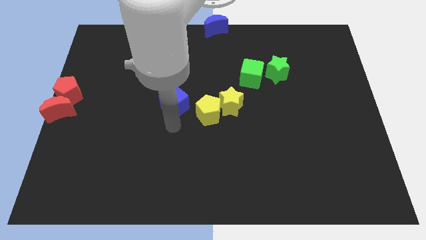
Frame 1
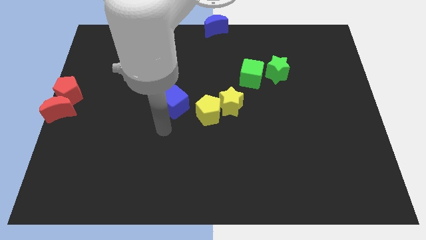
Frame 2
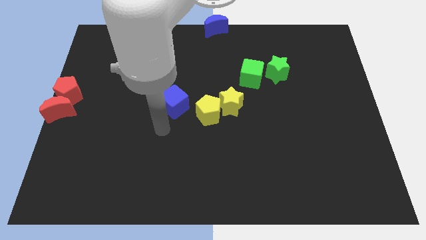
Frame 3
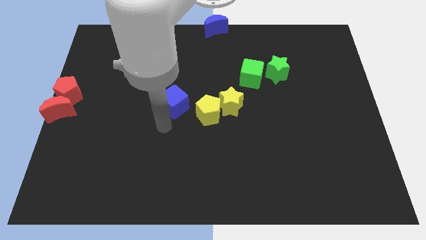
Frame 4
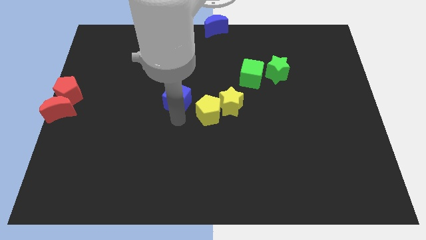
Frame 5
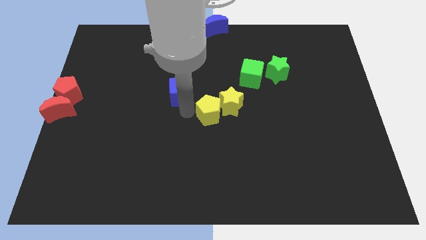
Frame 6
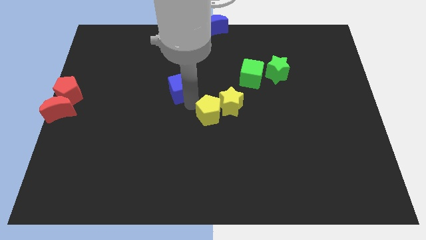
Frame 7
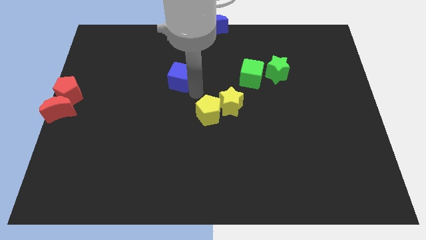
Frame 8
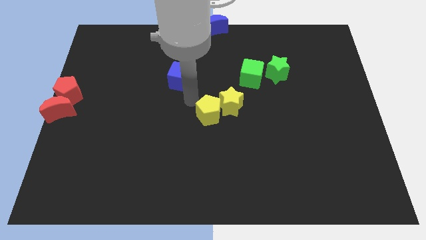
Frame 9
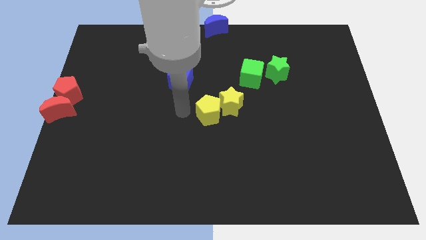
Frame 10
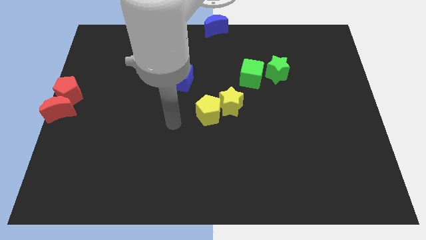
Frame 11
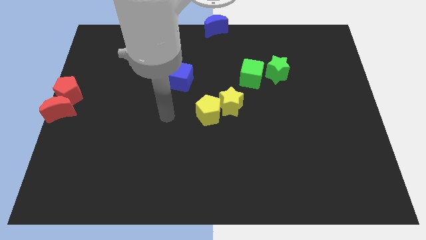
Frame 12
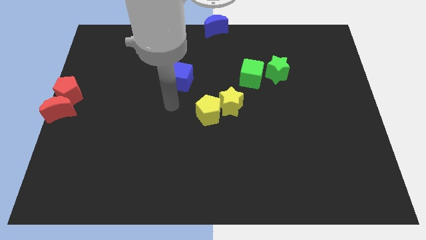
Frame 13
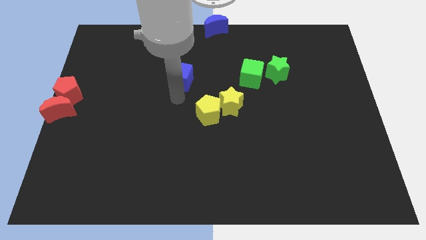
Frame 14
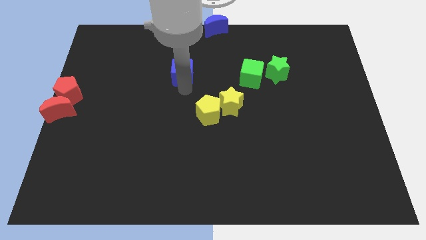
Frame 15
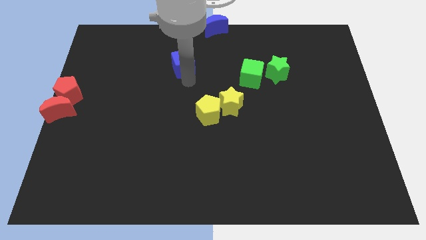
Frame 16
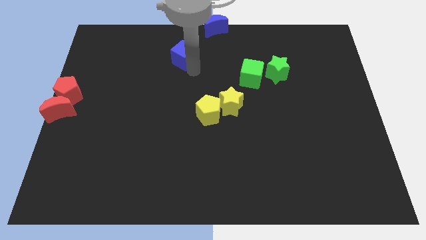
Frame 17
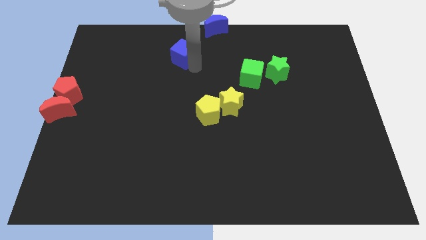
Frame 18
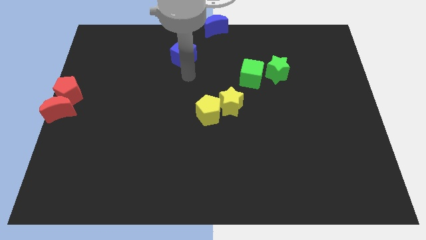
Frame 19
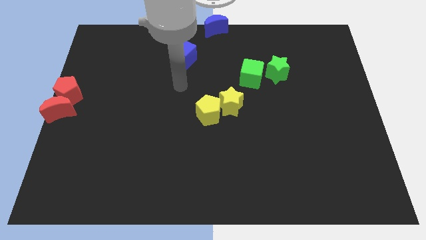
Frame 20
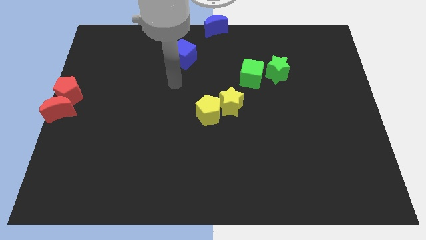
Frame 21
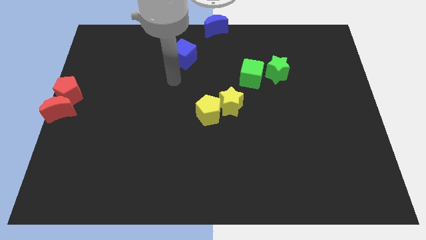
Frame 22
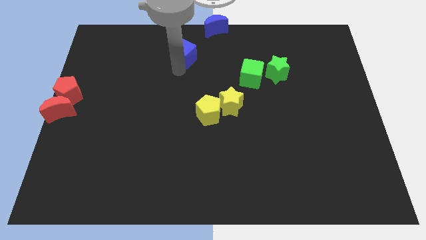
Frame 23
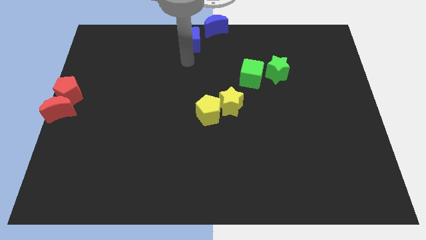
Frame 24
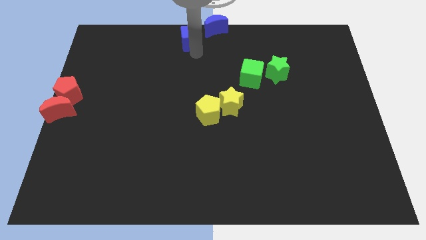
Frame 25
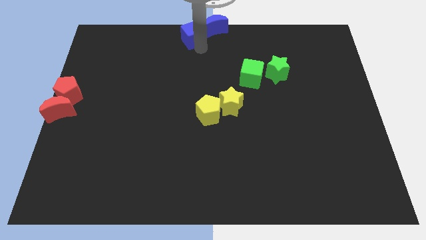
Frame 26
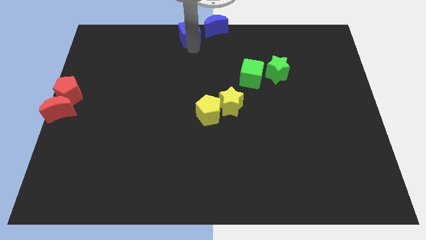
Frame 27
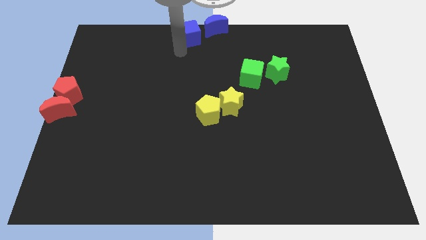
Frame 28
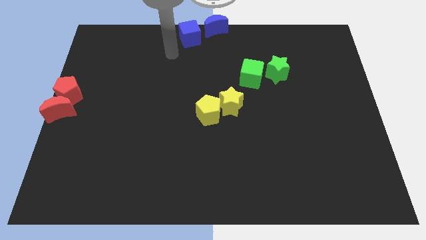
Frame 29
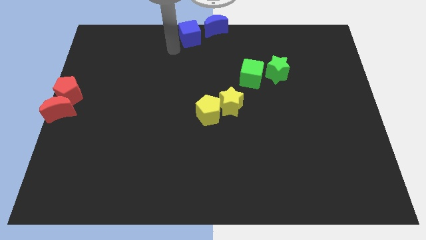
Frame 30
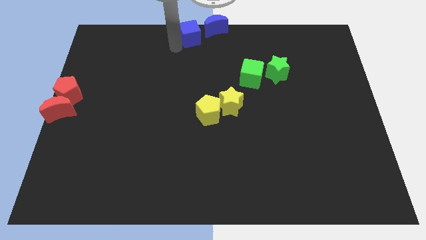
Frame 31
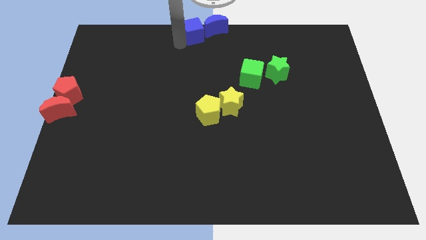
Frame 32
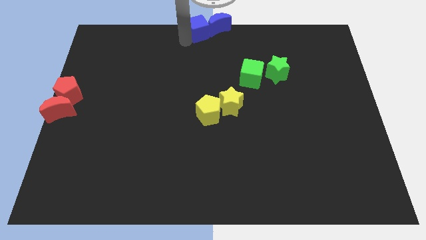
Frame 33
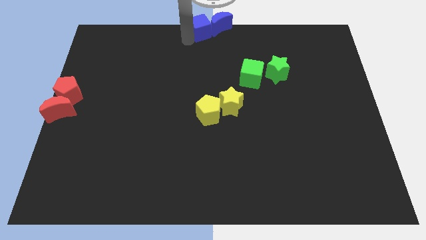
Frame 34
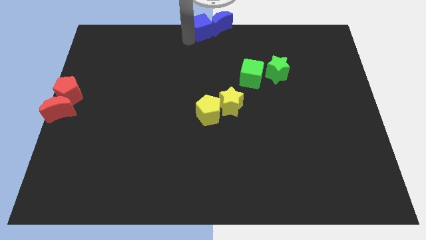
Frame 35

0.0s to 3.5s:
group up the blue blocks at the top center of the board

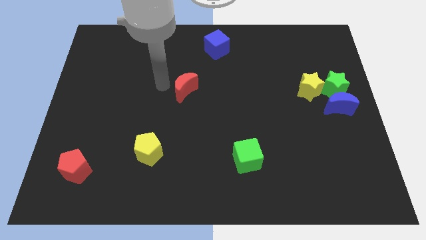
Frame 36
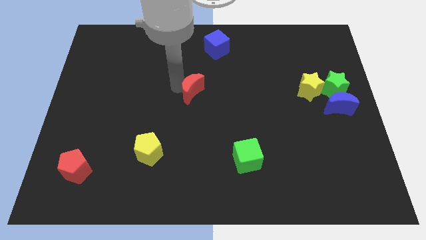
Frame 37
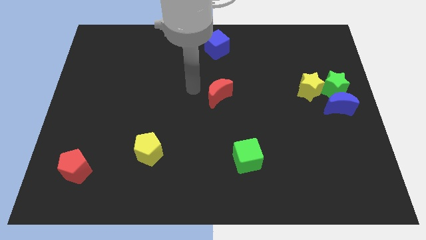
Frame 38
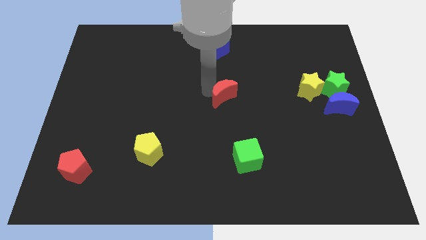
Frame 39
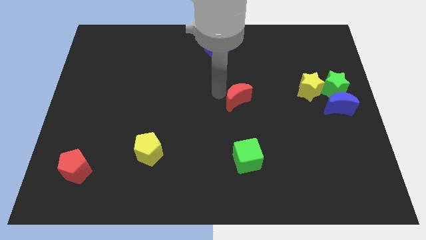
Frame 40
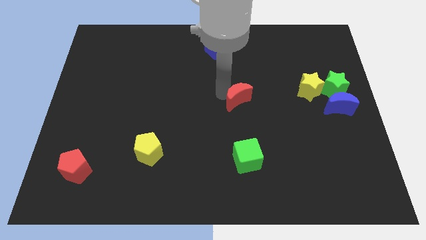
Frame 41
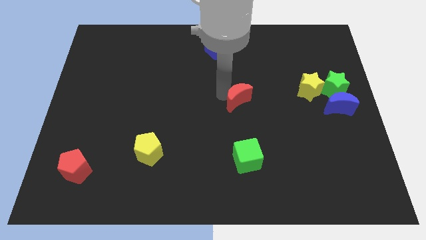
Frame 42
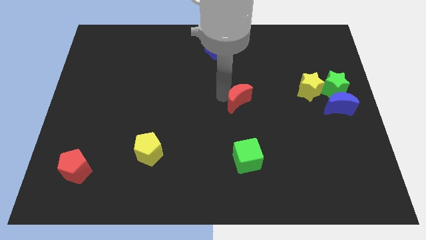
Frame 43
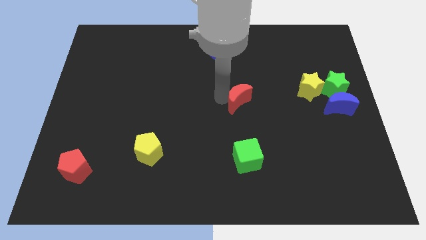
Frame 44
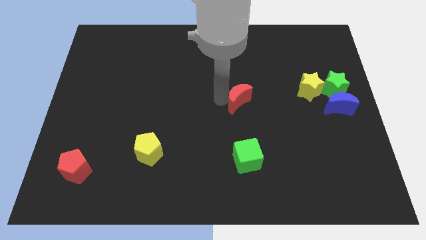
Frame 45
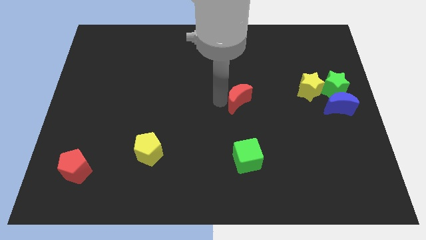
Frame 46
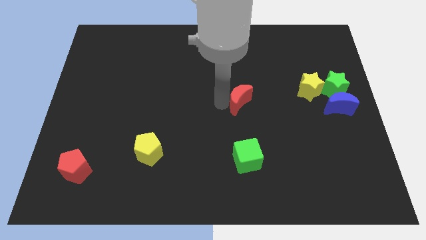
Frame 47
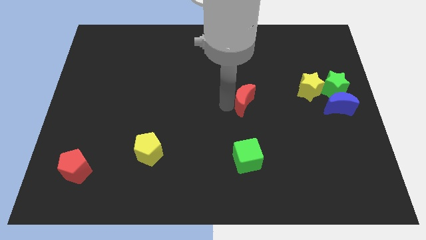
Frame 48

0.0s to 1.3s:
move the red moon above the green cube

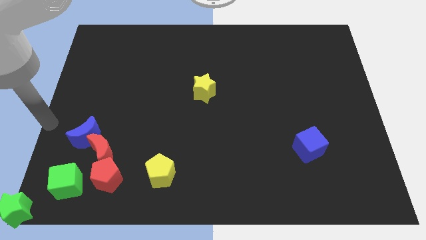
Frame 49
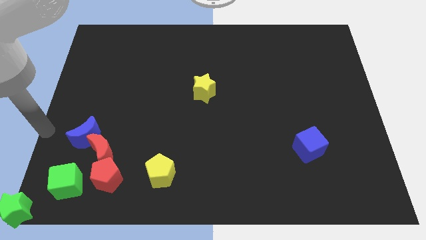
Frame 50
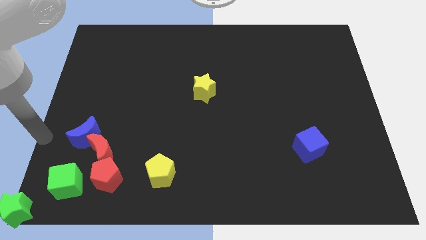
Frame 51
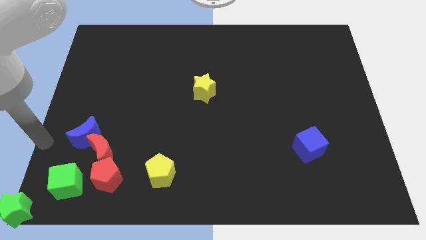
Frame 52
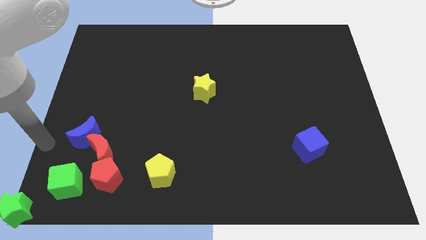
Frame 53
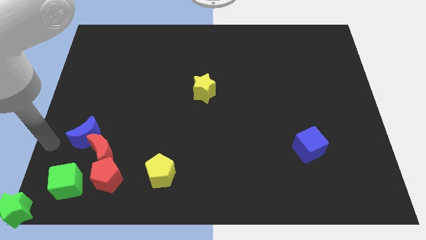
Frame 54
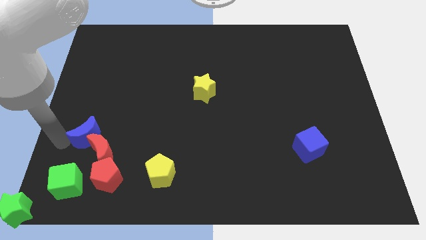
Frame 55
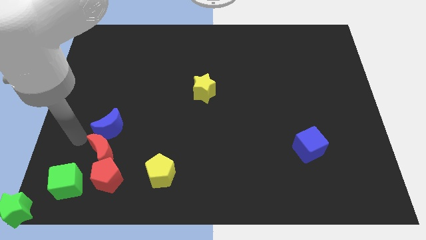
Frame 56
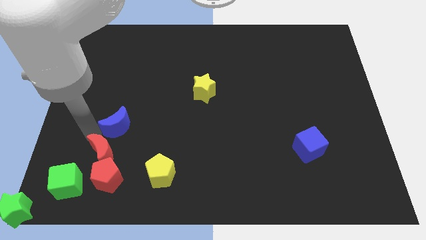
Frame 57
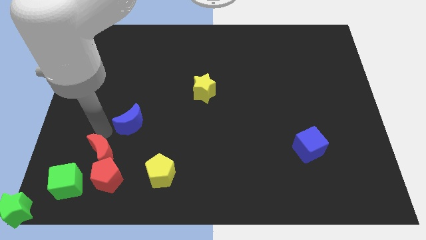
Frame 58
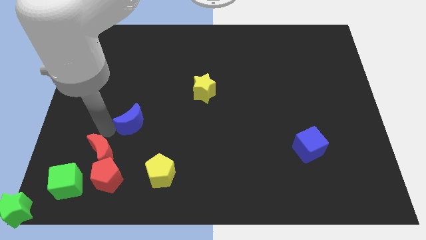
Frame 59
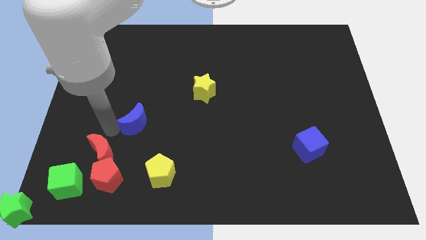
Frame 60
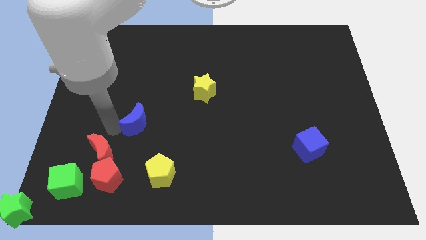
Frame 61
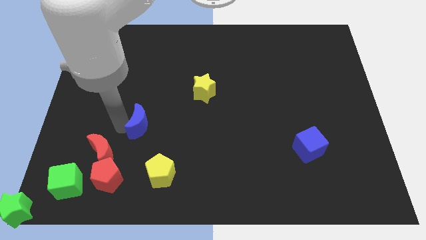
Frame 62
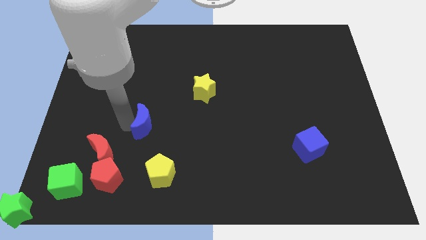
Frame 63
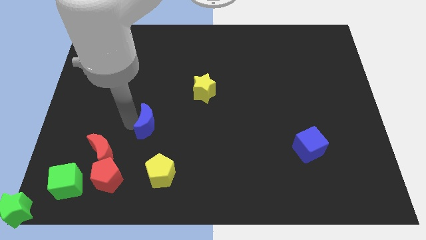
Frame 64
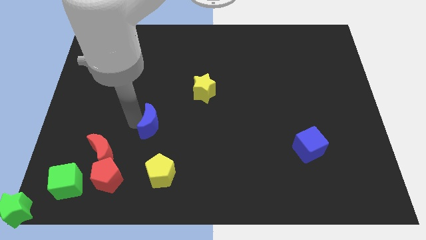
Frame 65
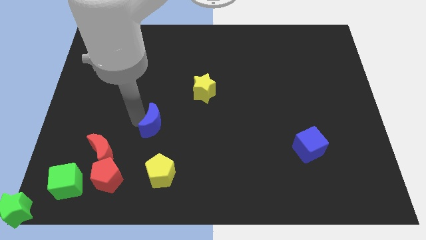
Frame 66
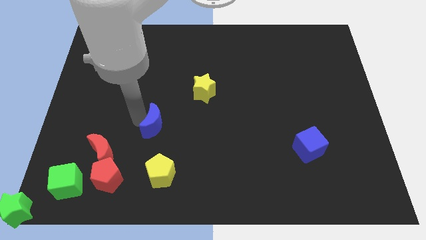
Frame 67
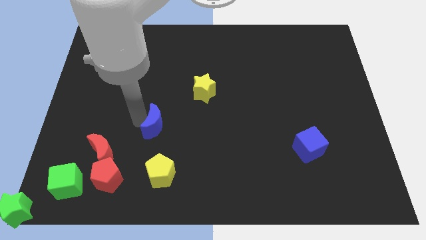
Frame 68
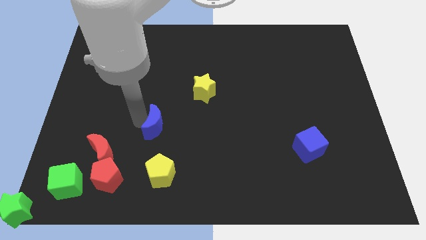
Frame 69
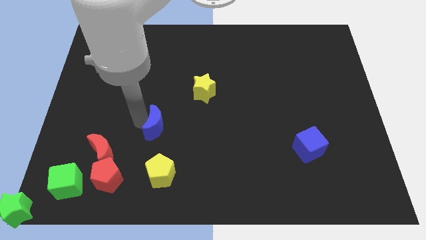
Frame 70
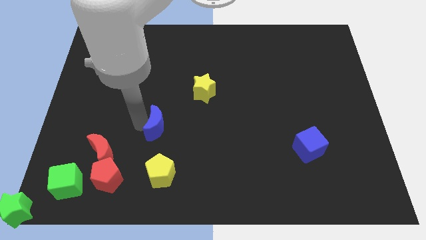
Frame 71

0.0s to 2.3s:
move the blue moon above the yellow pentagon

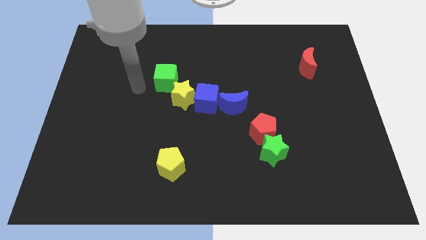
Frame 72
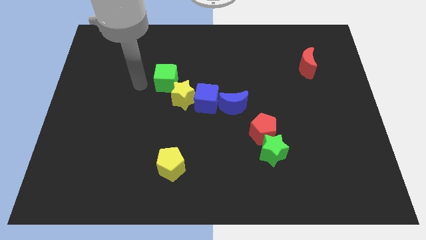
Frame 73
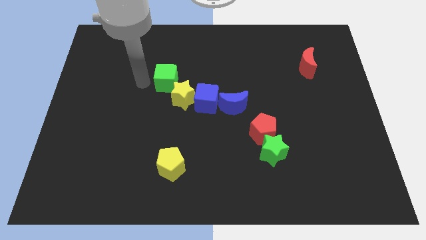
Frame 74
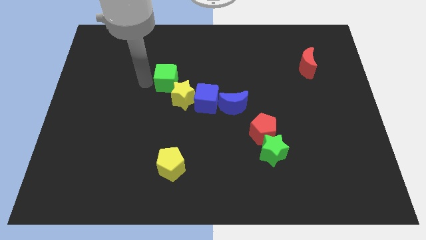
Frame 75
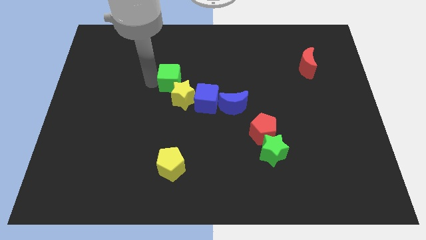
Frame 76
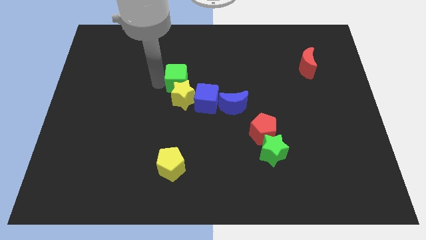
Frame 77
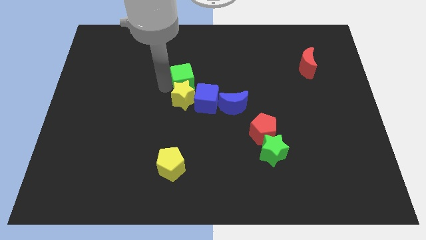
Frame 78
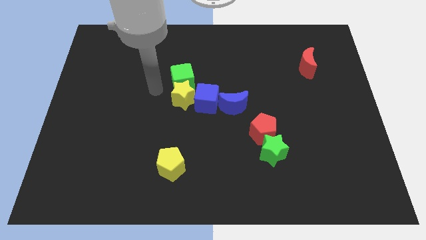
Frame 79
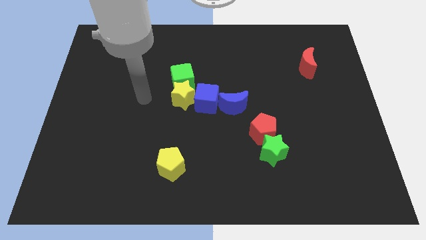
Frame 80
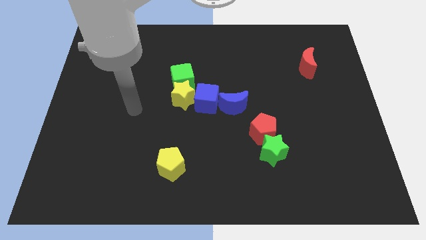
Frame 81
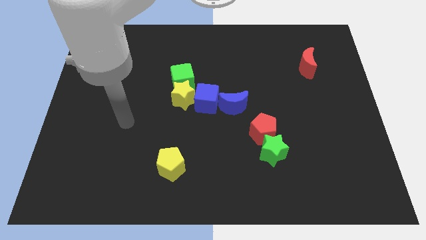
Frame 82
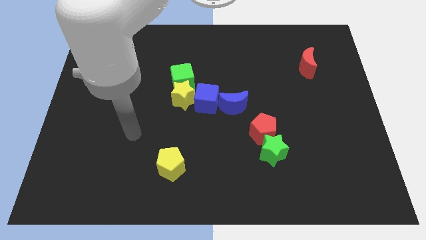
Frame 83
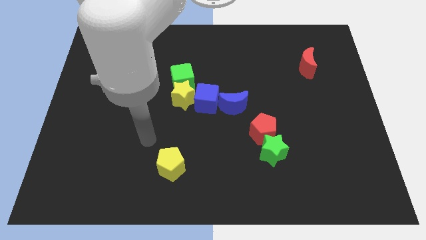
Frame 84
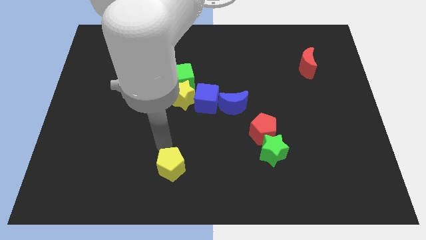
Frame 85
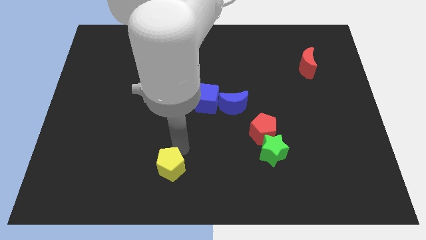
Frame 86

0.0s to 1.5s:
push the green cube above the yellow star

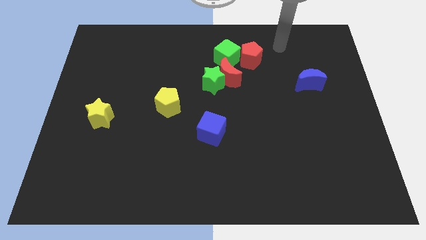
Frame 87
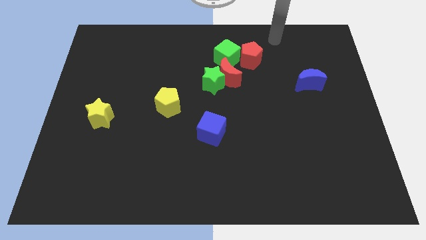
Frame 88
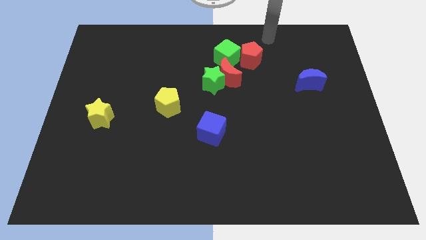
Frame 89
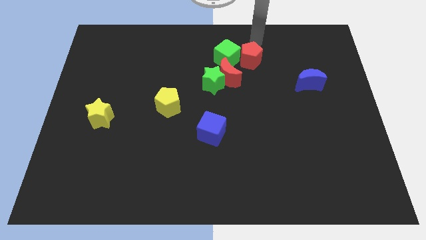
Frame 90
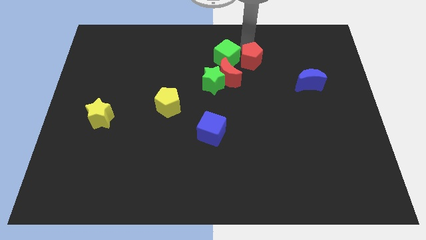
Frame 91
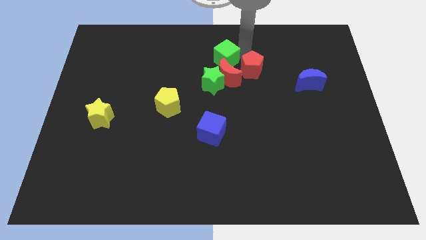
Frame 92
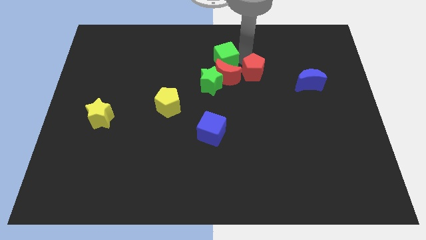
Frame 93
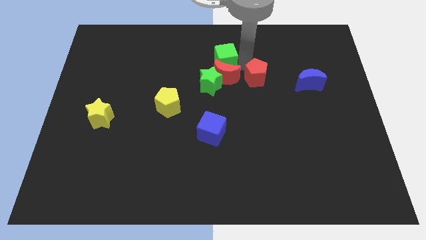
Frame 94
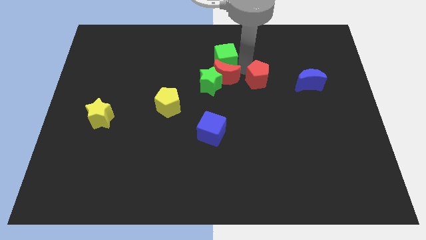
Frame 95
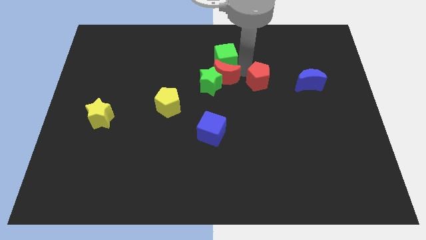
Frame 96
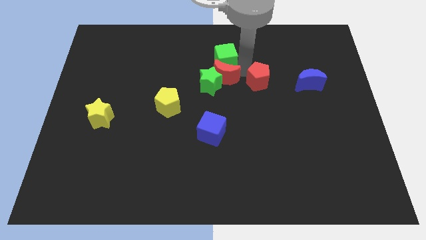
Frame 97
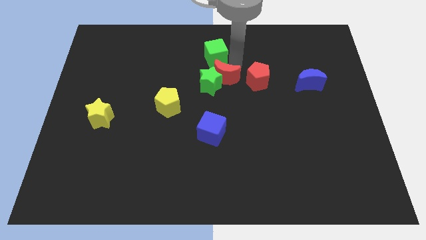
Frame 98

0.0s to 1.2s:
push the red pentagon away from the green cube
